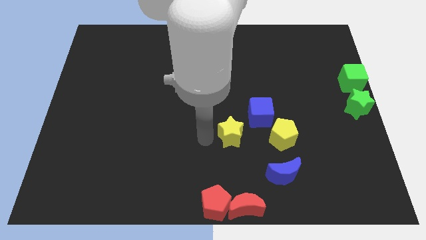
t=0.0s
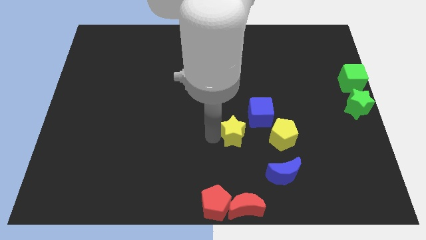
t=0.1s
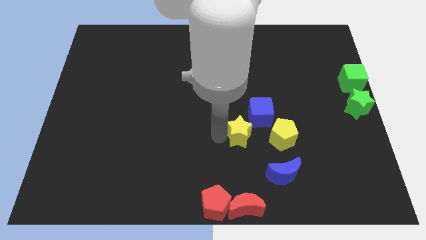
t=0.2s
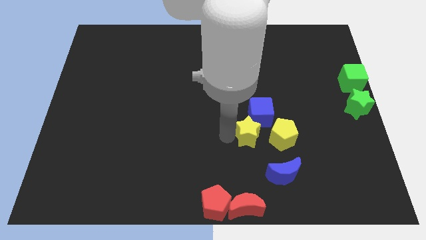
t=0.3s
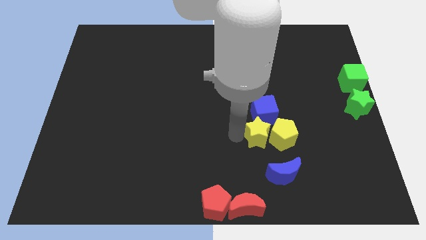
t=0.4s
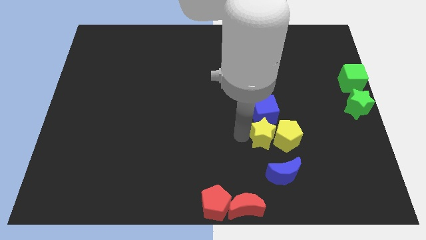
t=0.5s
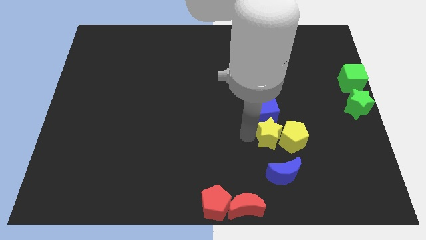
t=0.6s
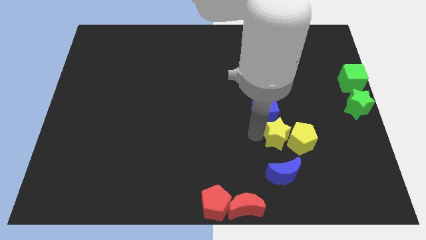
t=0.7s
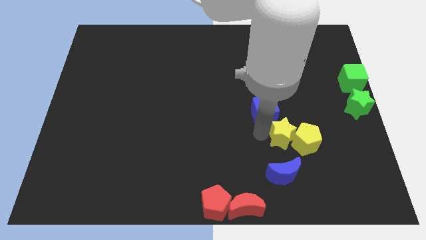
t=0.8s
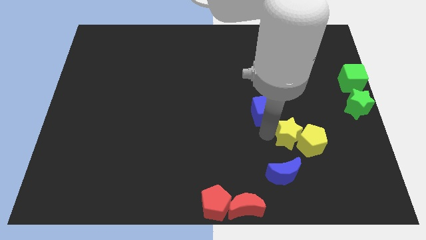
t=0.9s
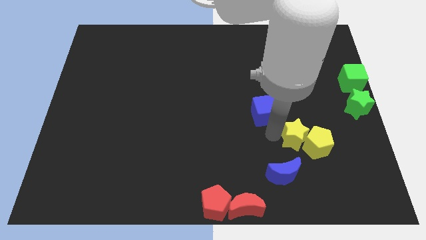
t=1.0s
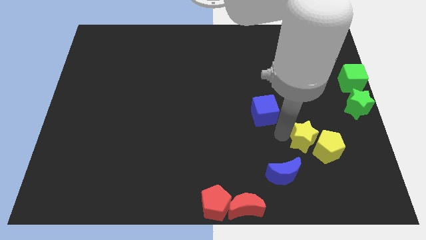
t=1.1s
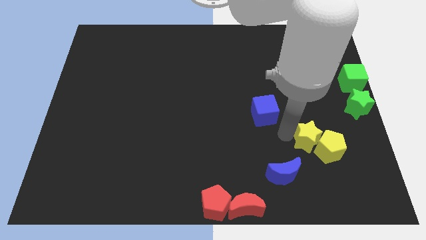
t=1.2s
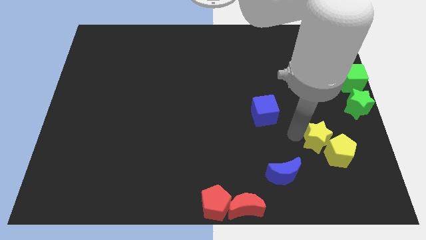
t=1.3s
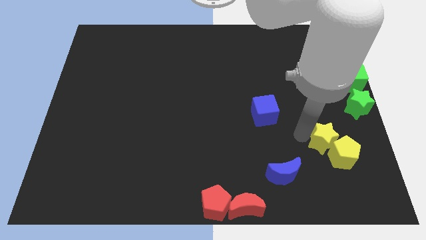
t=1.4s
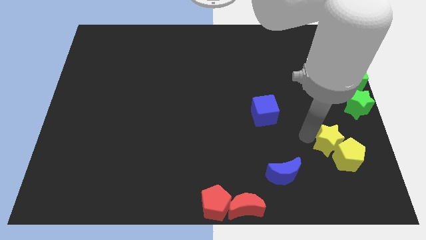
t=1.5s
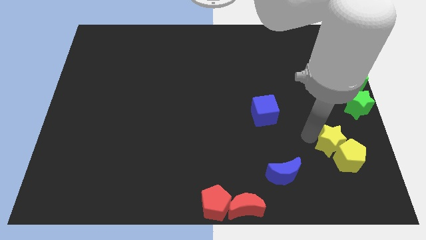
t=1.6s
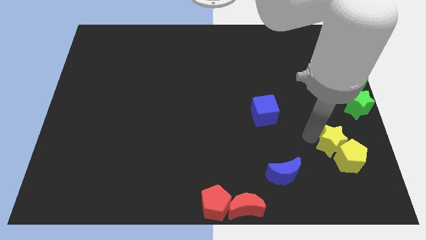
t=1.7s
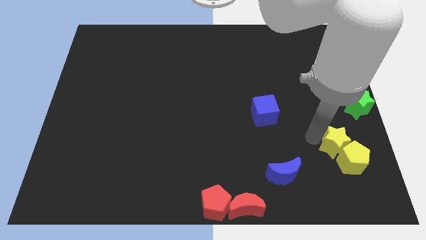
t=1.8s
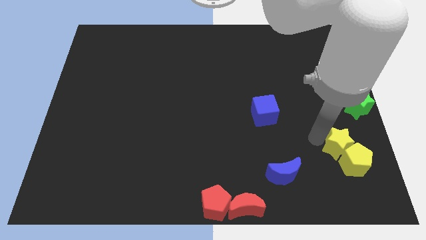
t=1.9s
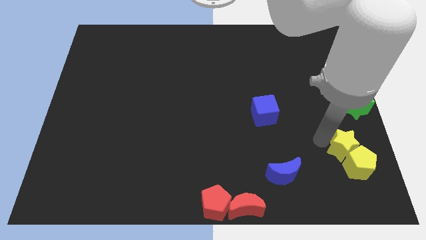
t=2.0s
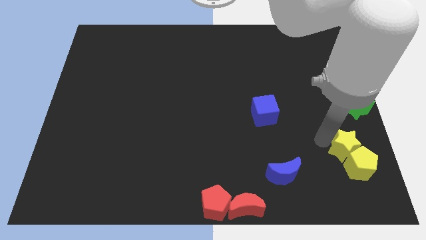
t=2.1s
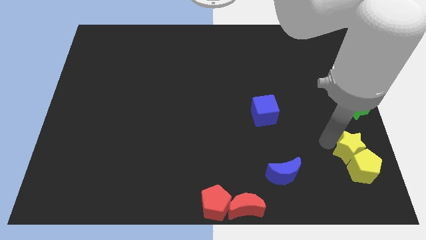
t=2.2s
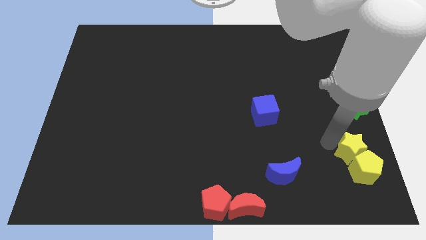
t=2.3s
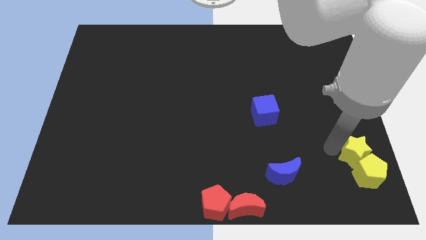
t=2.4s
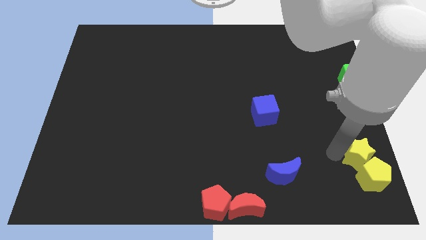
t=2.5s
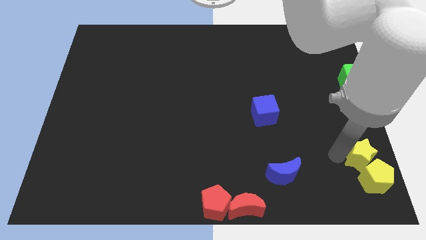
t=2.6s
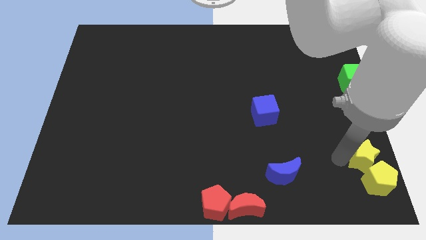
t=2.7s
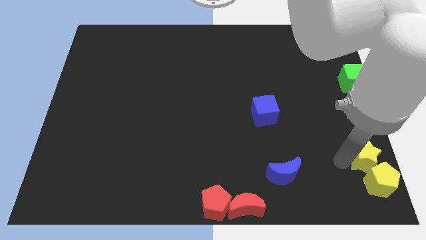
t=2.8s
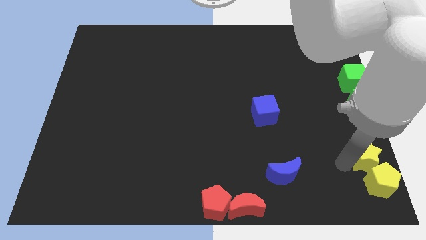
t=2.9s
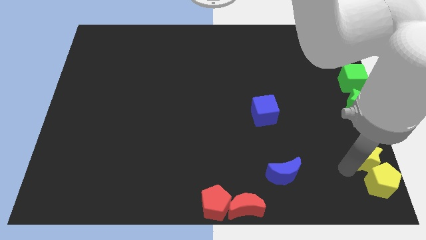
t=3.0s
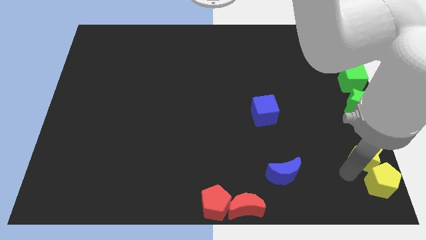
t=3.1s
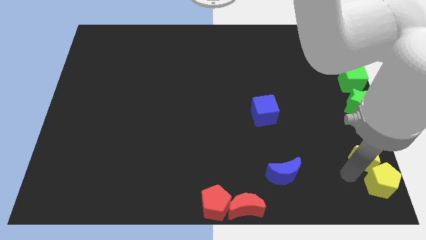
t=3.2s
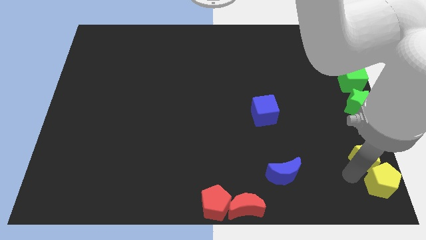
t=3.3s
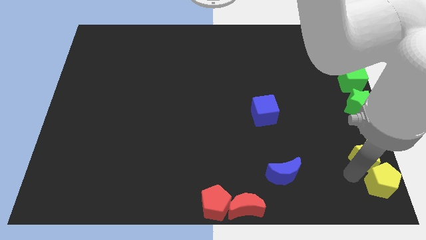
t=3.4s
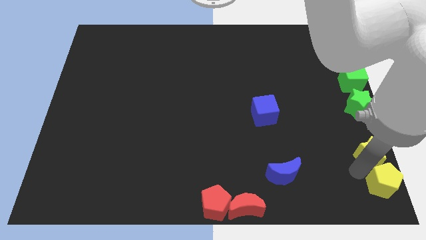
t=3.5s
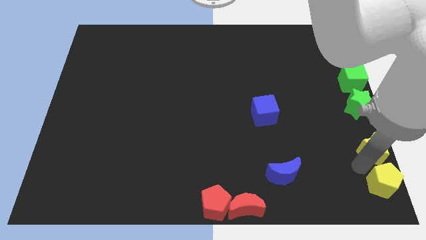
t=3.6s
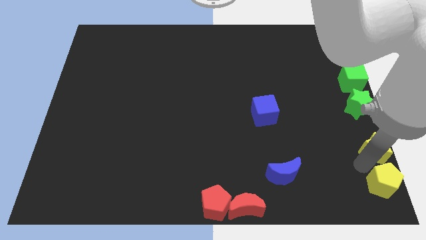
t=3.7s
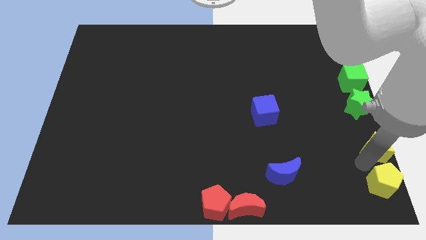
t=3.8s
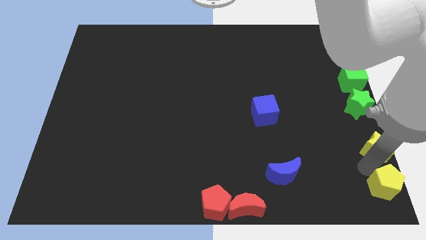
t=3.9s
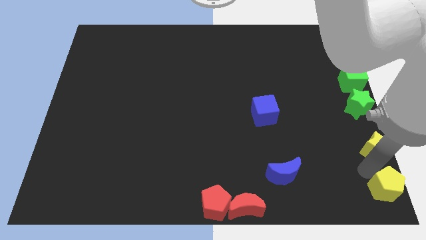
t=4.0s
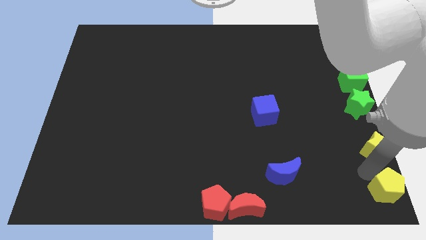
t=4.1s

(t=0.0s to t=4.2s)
push the yellow star and yellow pentagon to the bottom right of the board

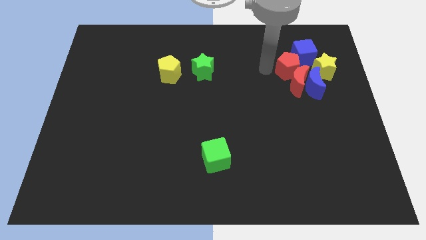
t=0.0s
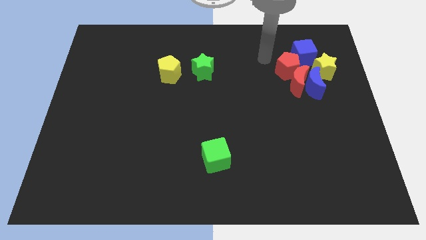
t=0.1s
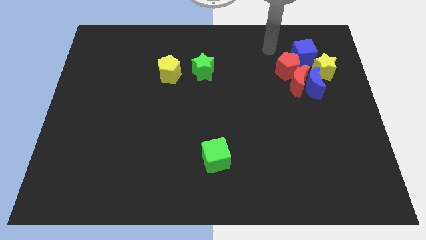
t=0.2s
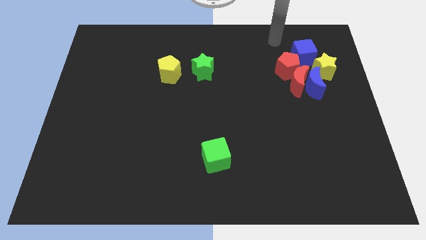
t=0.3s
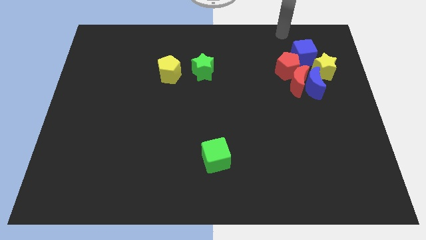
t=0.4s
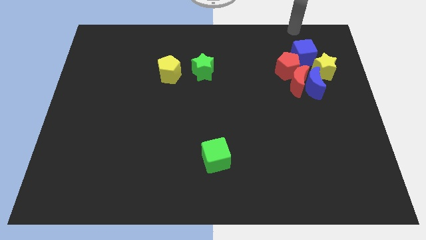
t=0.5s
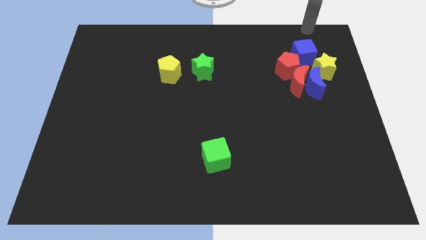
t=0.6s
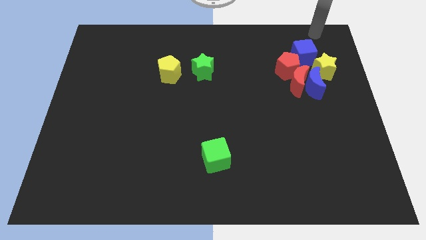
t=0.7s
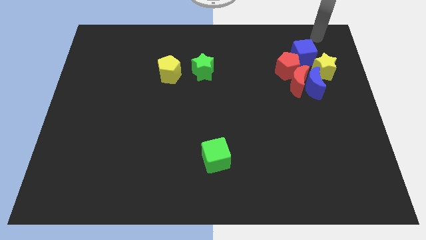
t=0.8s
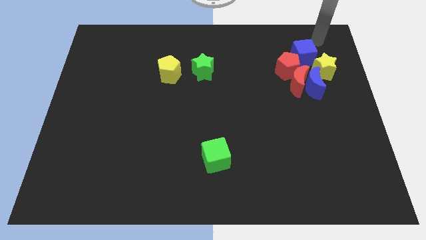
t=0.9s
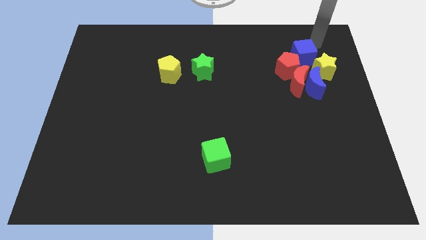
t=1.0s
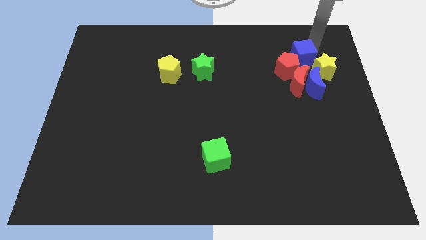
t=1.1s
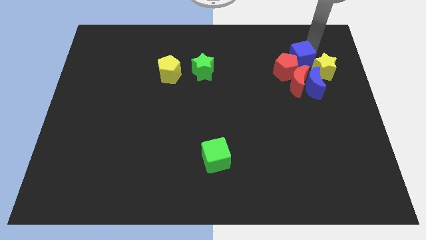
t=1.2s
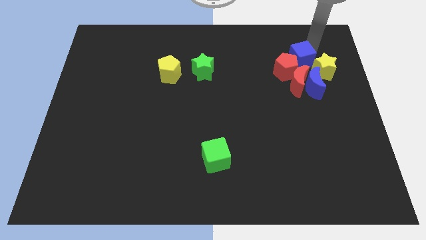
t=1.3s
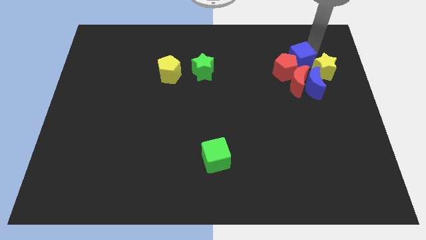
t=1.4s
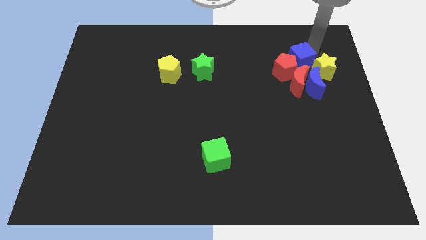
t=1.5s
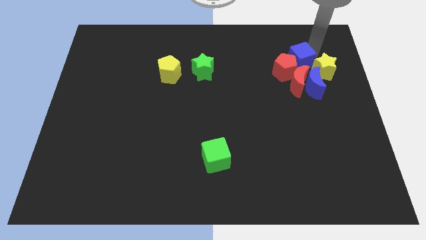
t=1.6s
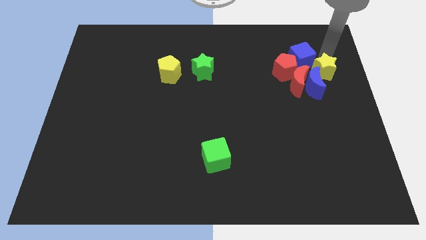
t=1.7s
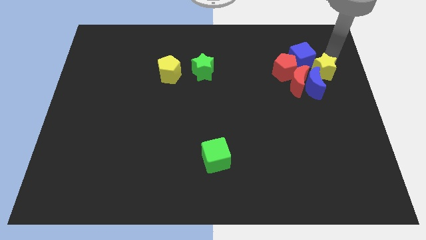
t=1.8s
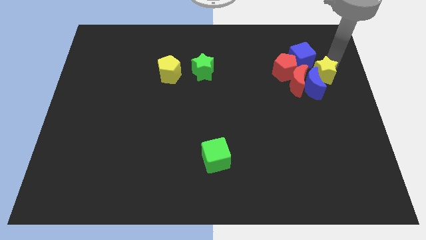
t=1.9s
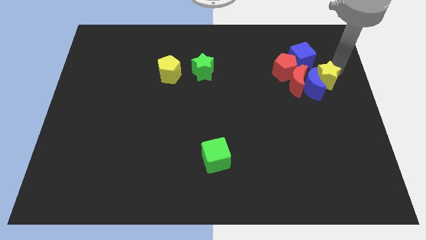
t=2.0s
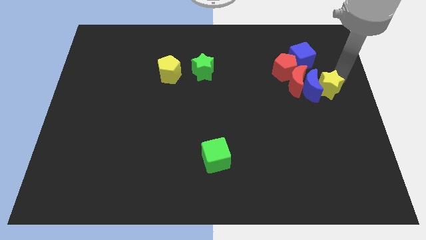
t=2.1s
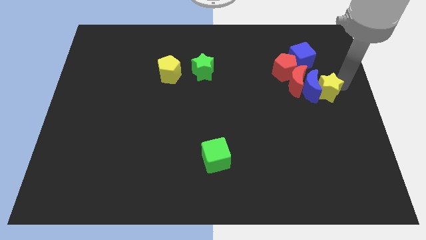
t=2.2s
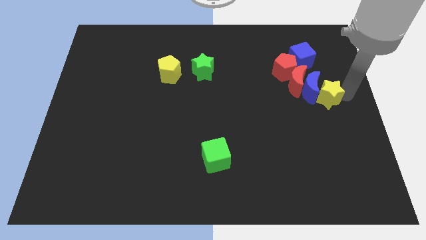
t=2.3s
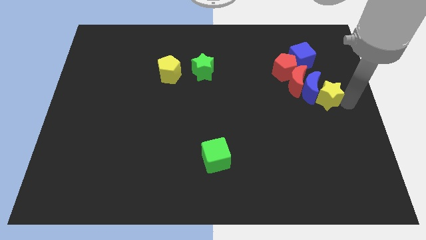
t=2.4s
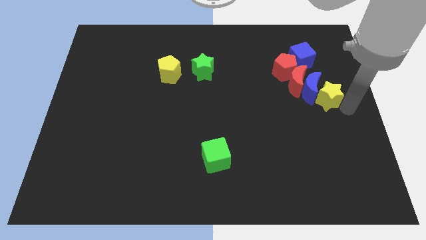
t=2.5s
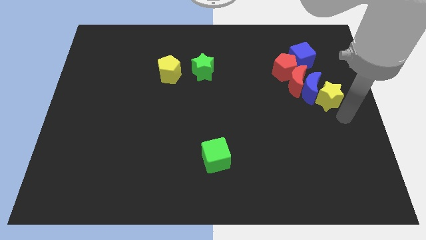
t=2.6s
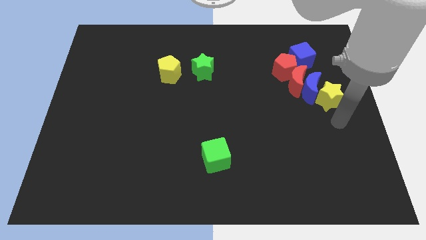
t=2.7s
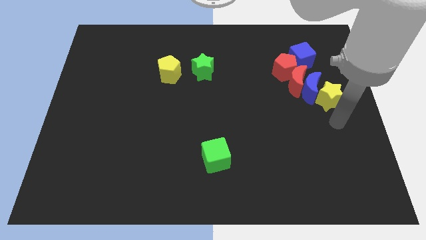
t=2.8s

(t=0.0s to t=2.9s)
push yellow star slightly towards down

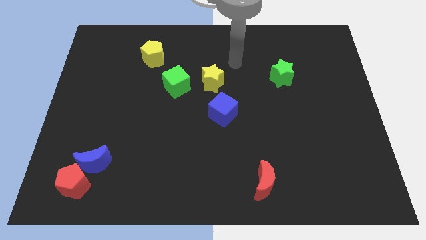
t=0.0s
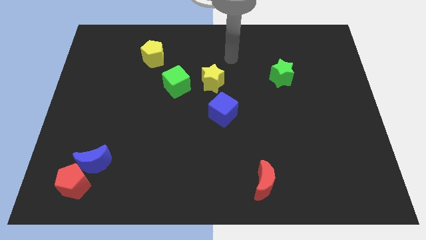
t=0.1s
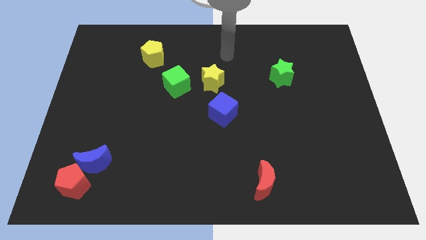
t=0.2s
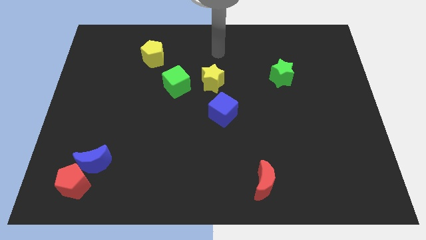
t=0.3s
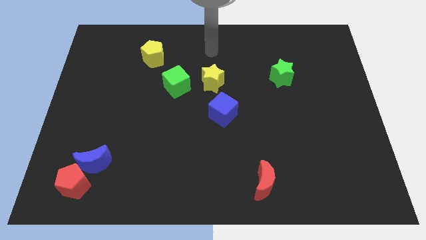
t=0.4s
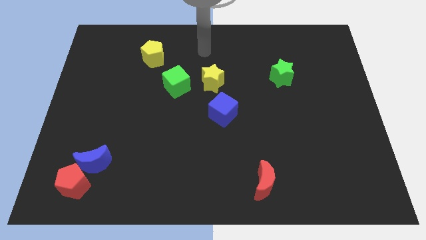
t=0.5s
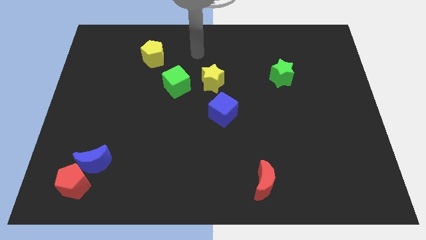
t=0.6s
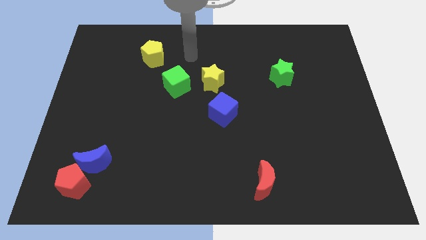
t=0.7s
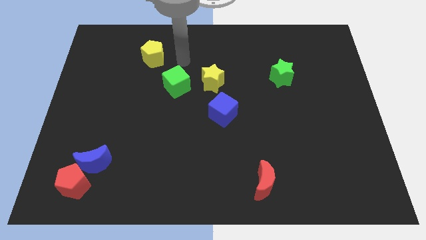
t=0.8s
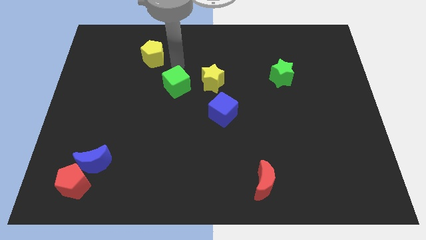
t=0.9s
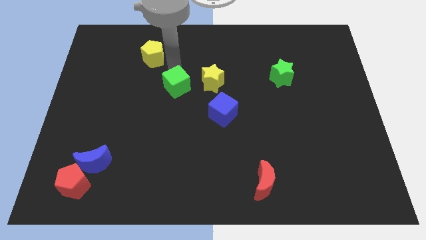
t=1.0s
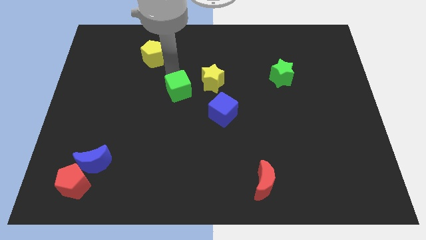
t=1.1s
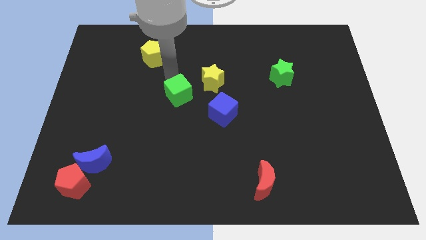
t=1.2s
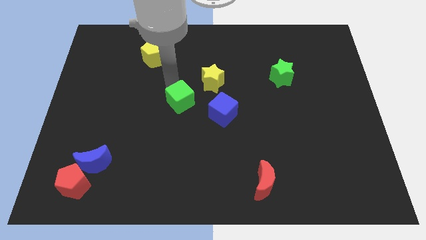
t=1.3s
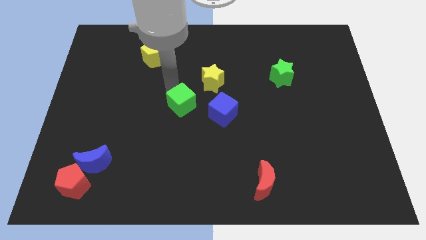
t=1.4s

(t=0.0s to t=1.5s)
move the green cube to the center of the board

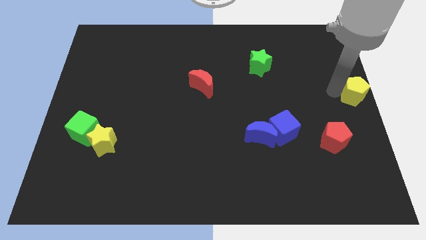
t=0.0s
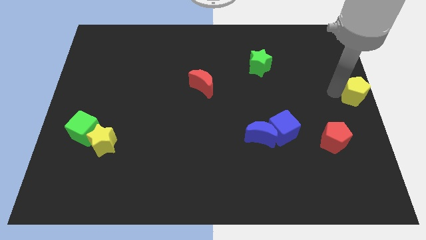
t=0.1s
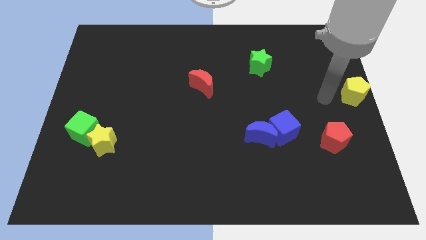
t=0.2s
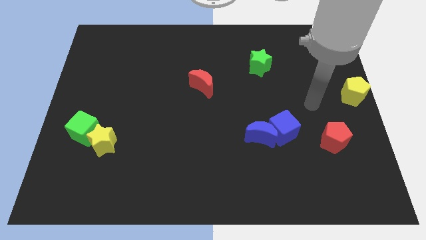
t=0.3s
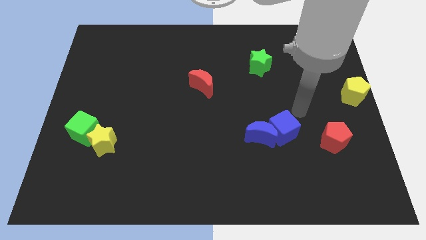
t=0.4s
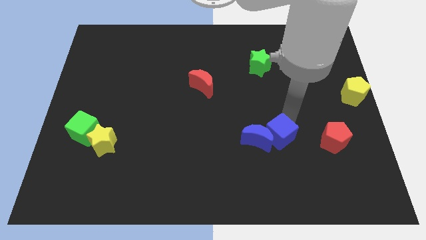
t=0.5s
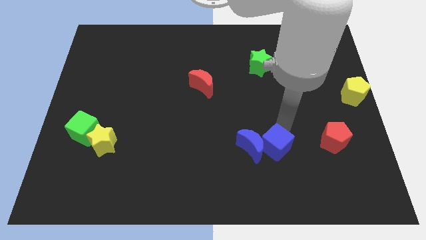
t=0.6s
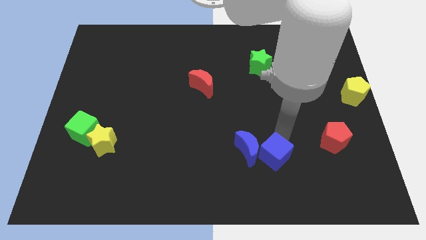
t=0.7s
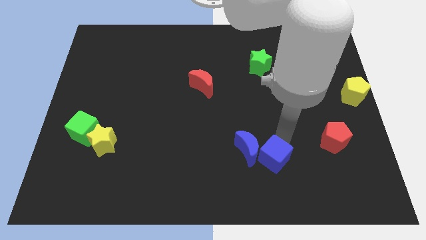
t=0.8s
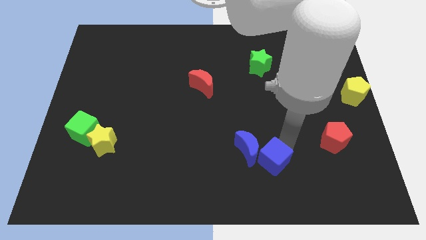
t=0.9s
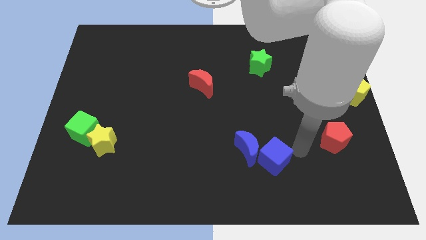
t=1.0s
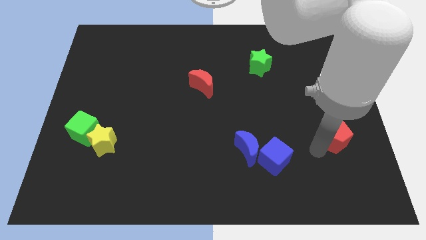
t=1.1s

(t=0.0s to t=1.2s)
push the blue cube and blue crescent towards down
